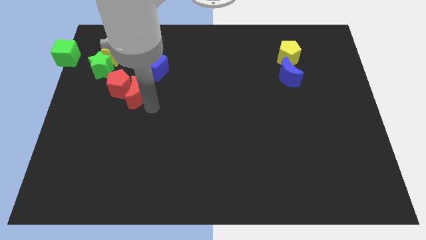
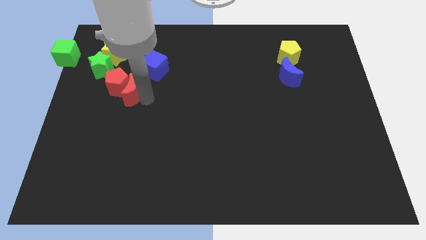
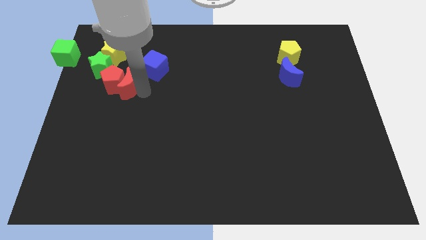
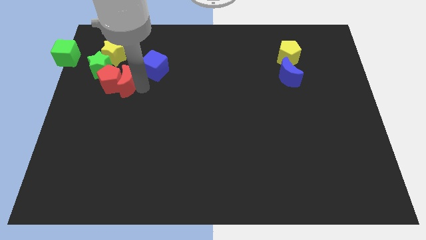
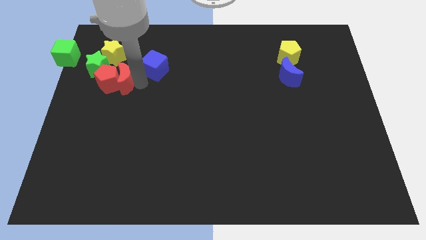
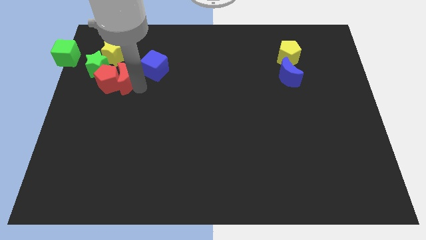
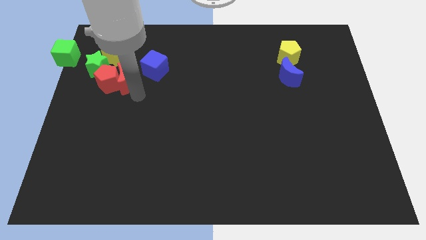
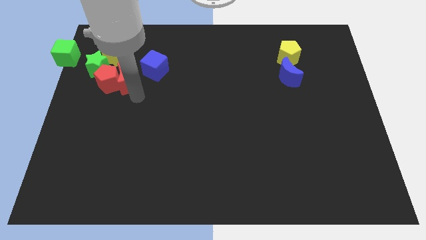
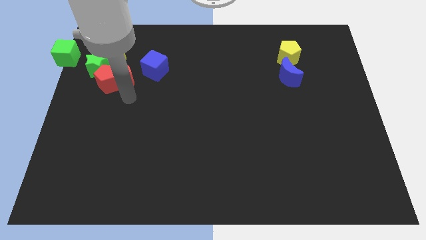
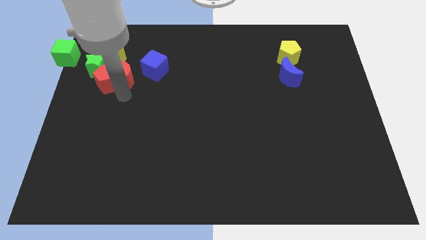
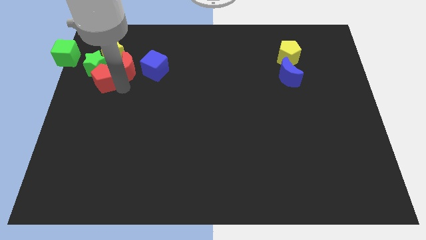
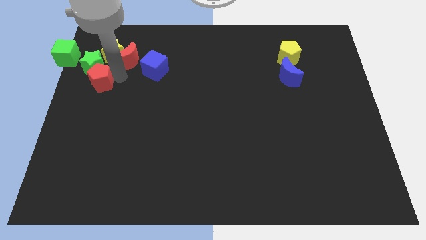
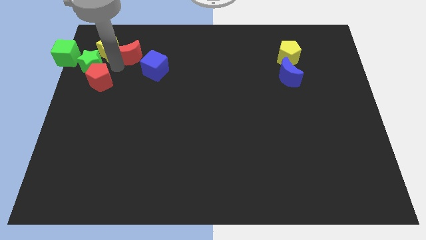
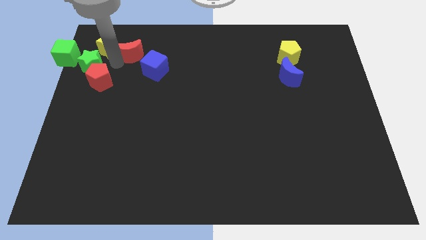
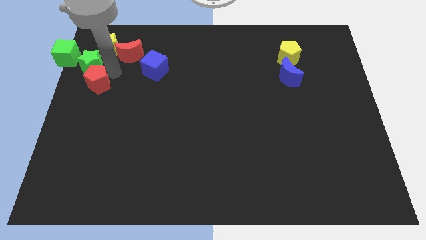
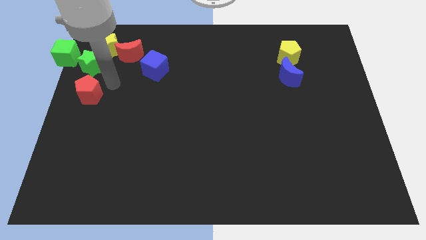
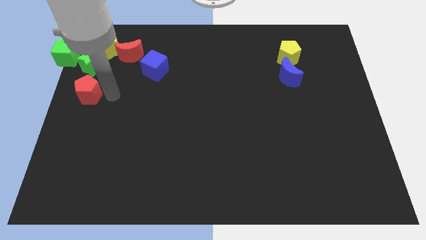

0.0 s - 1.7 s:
place the red moon in between blue cube and yellow star

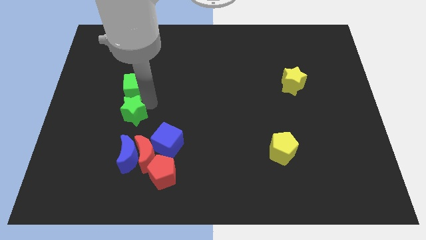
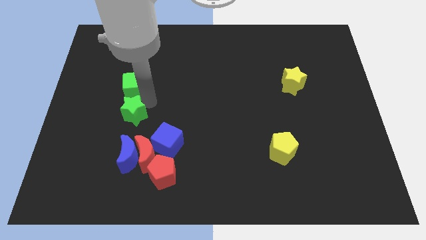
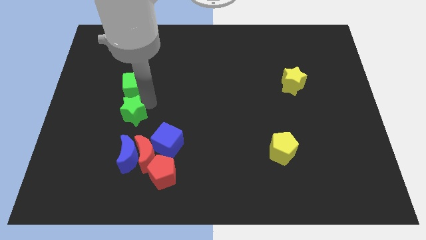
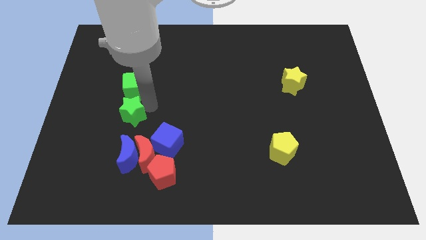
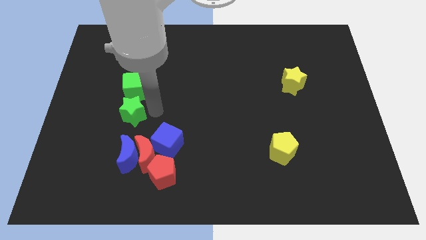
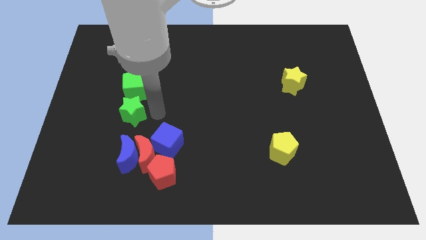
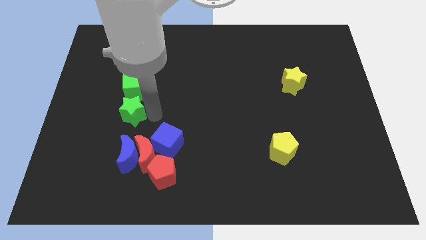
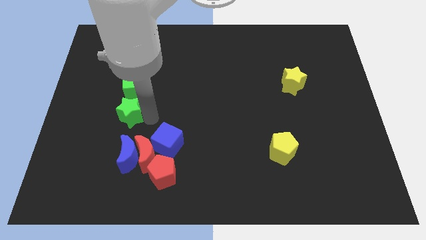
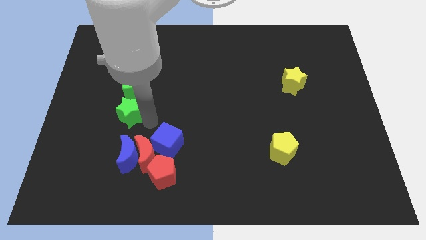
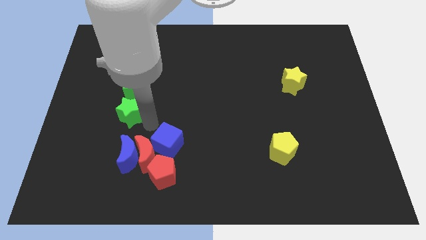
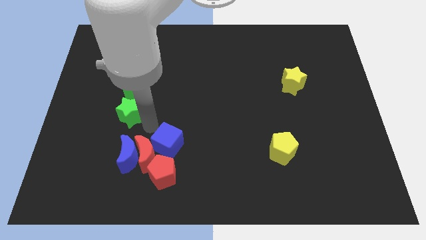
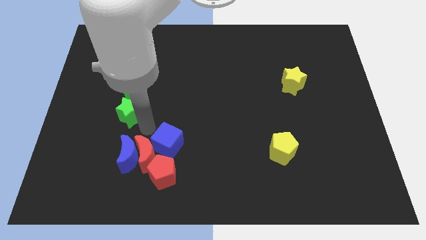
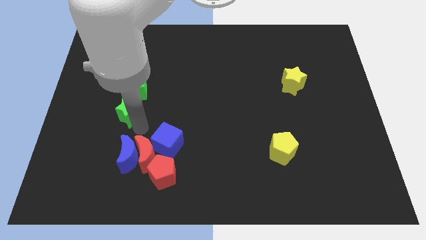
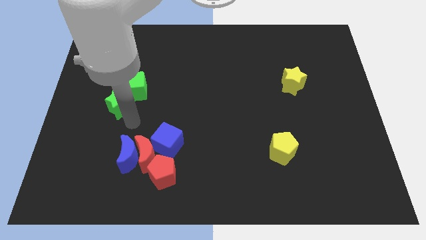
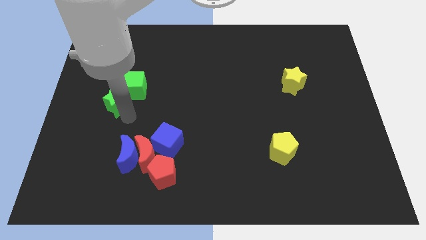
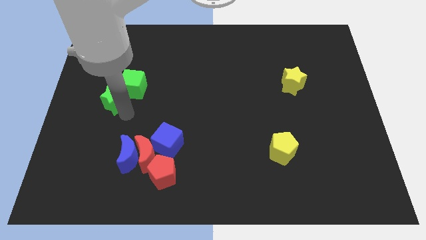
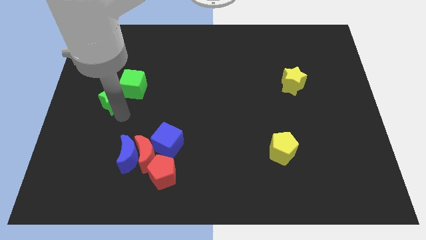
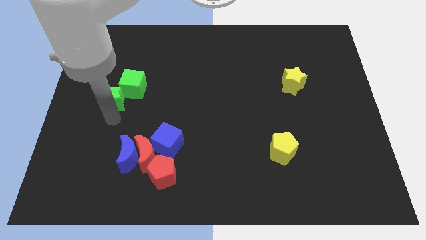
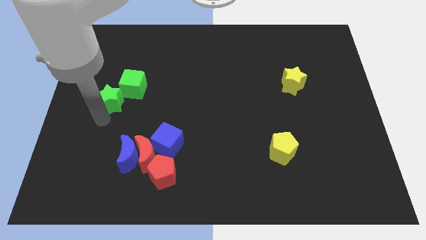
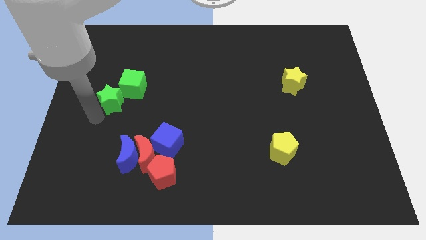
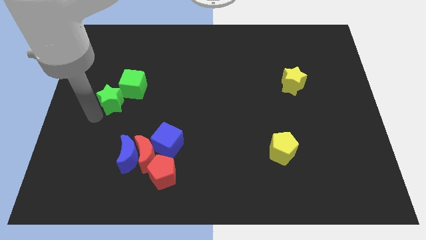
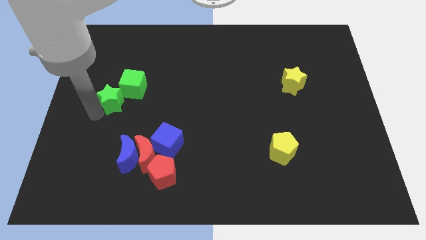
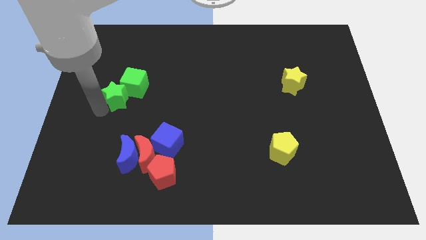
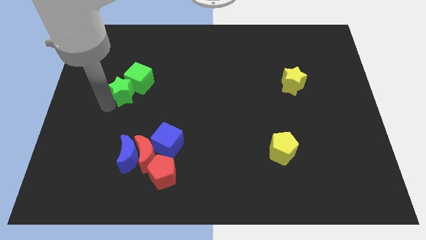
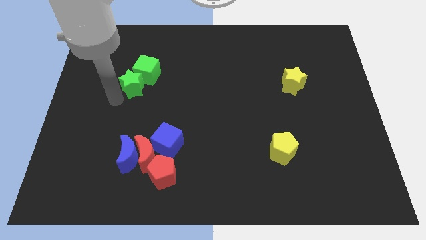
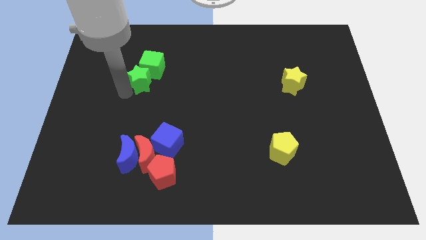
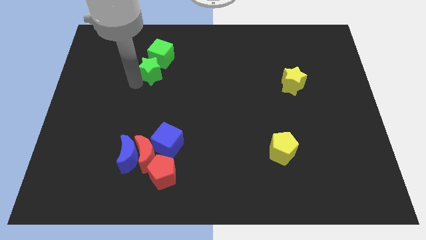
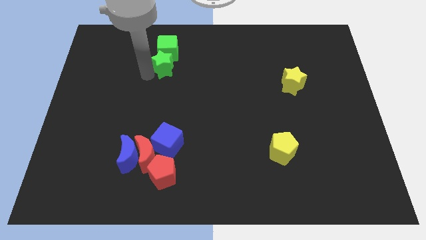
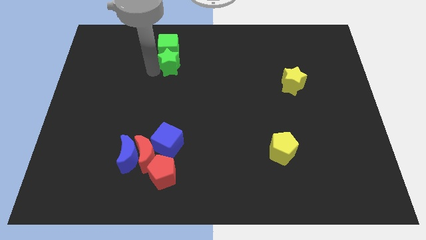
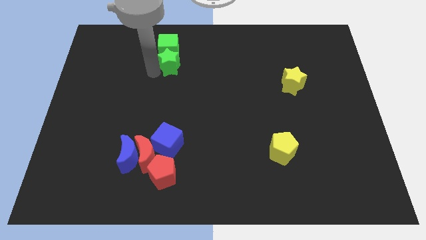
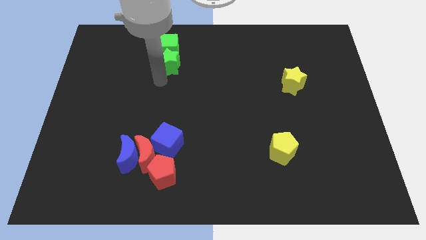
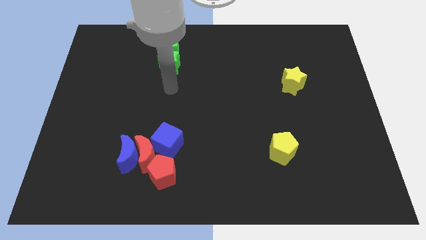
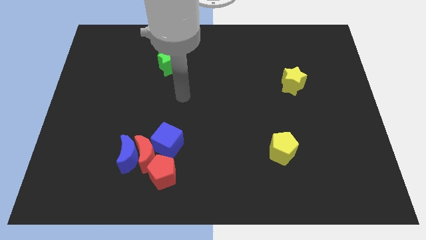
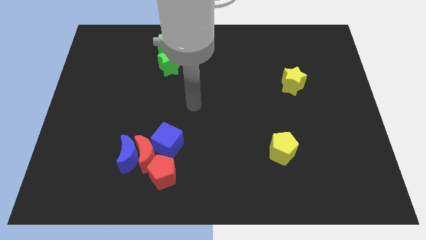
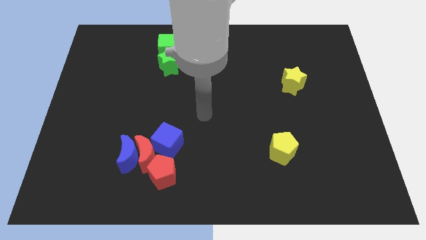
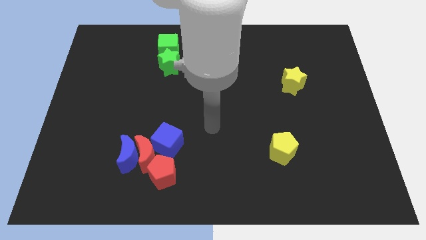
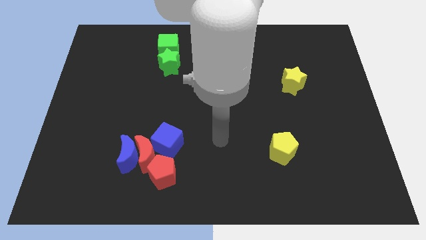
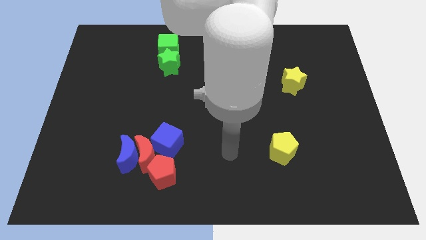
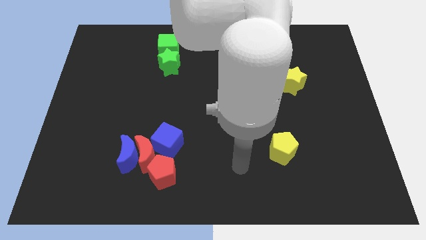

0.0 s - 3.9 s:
place the green blocks to the top center

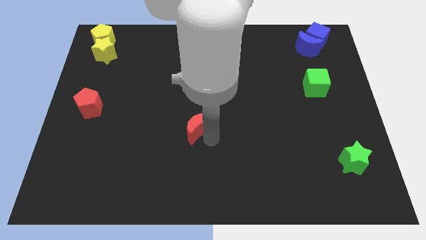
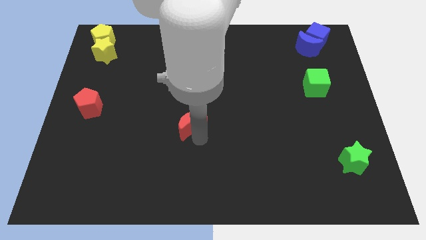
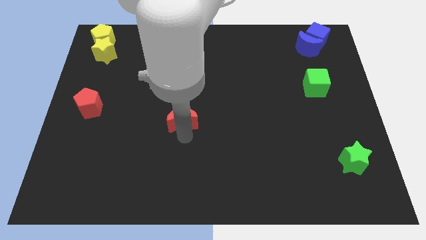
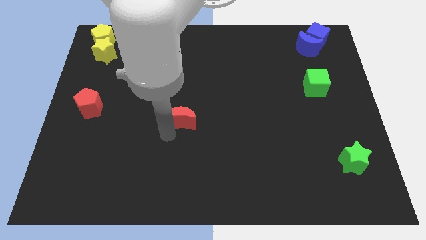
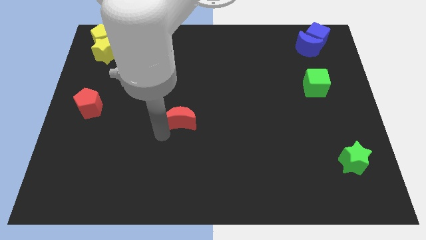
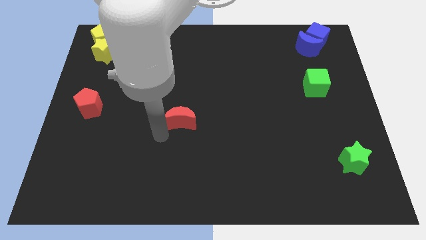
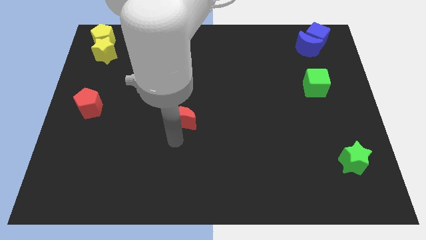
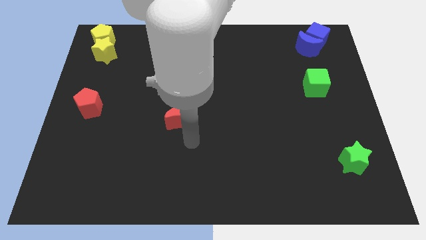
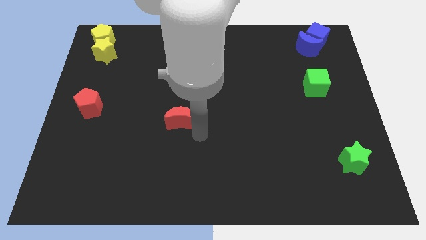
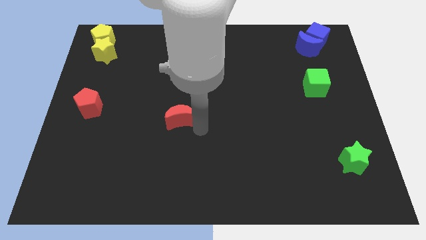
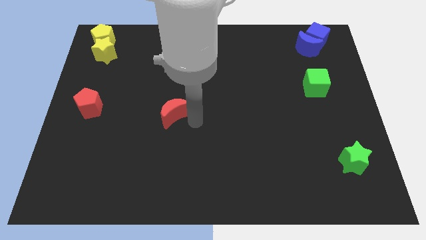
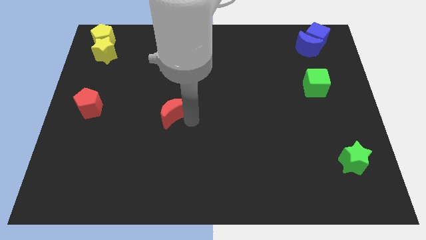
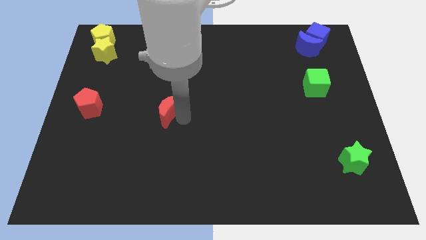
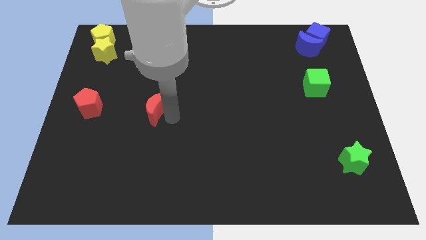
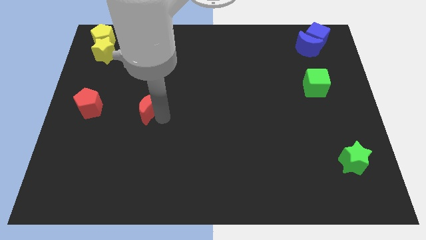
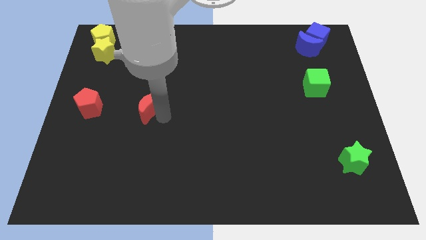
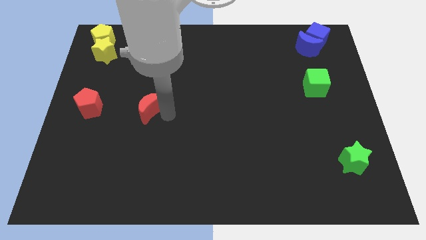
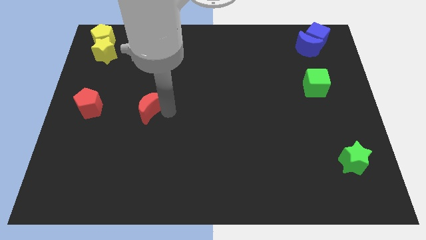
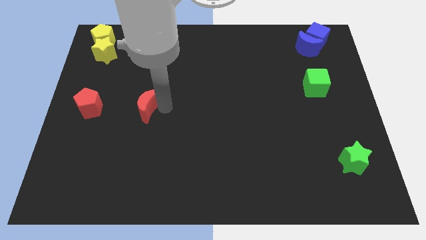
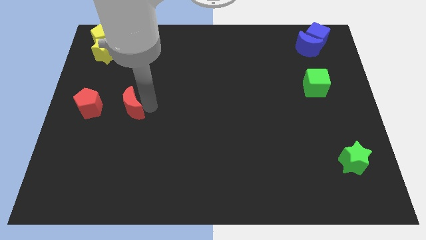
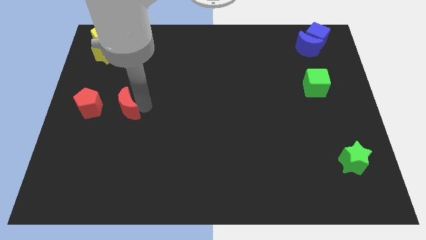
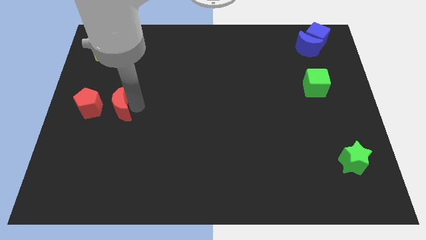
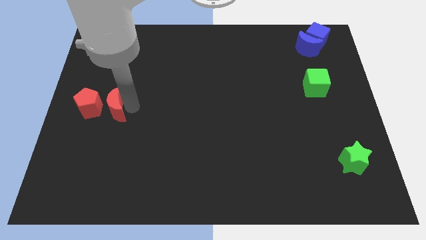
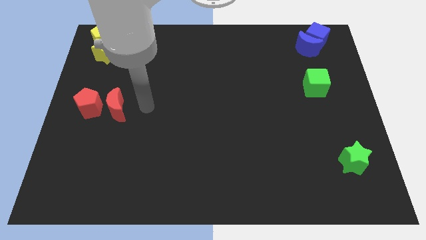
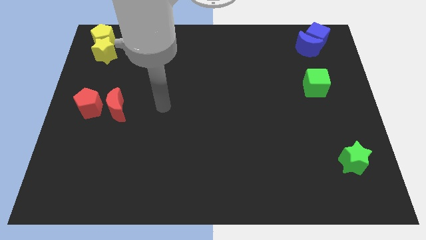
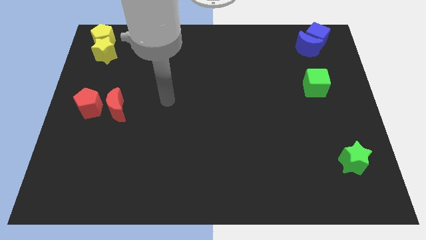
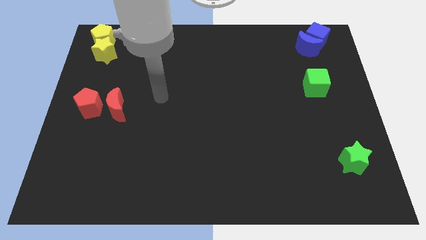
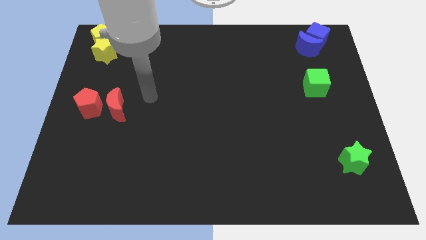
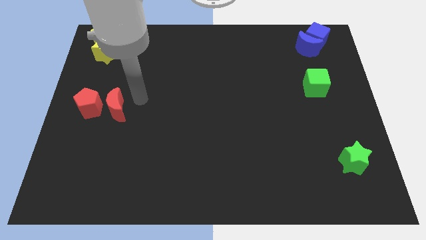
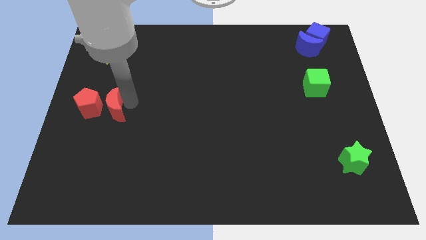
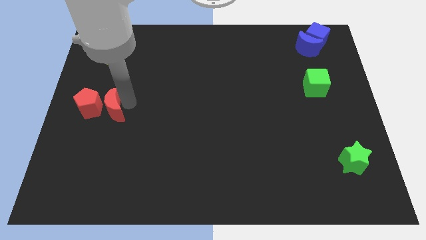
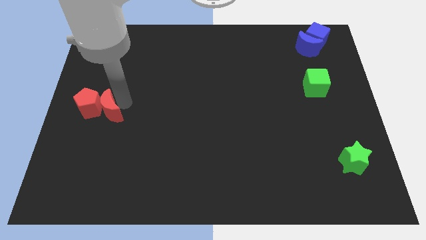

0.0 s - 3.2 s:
push red moon on the right of red pentagon

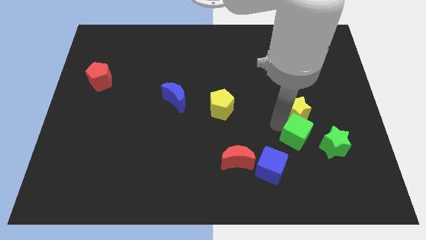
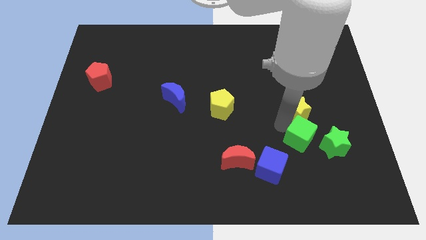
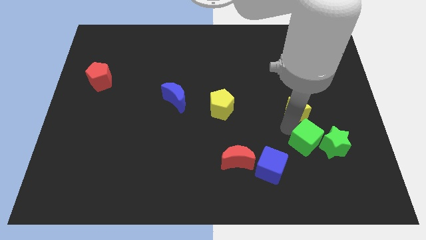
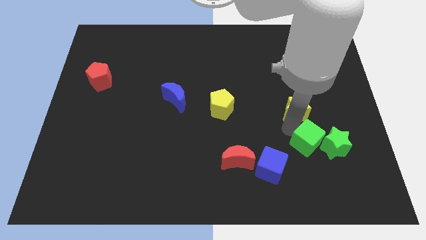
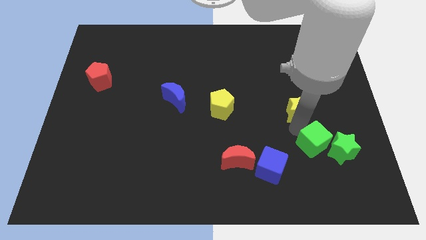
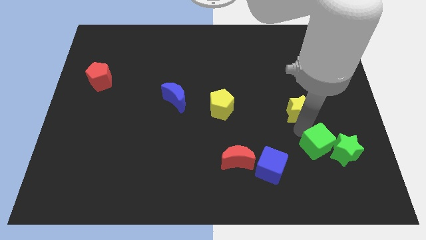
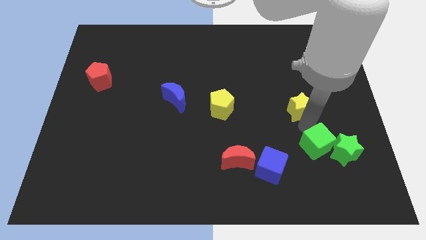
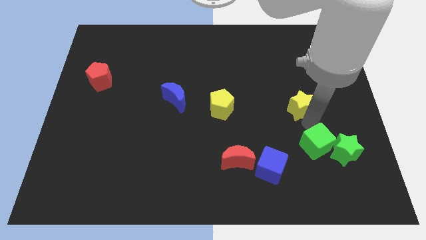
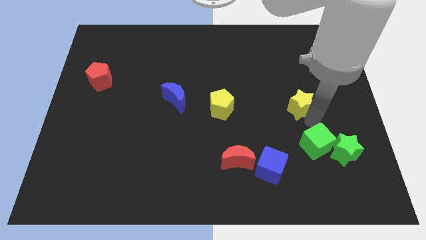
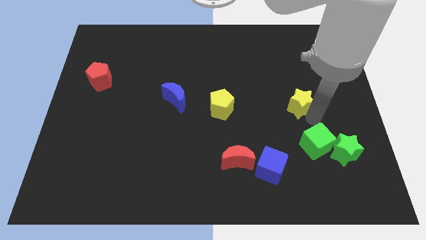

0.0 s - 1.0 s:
push the green cube to the left of the green star
